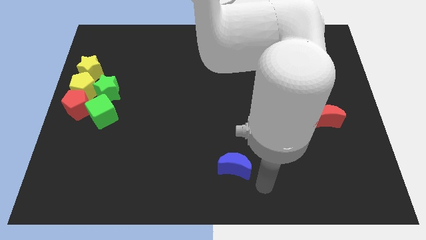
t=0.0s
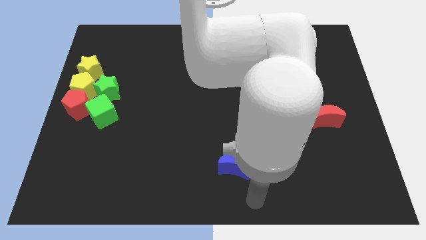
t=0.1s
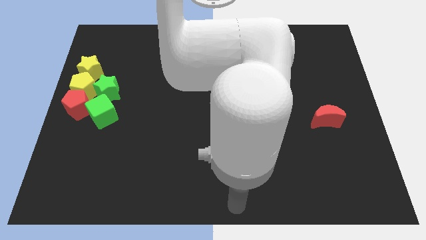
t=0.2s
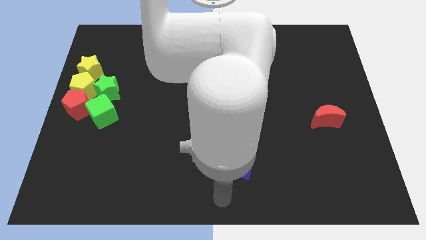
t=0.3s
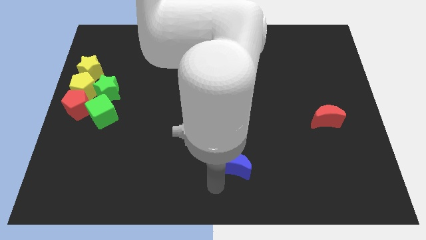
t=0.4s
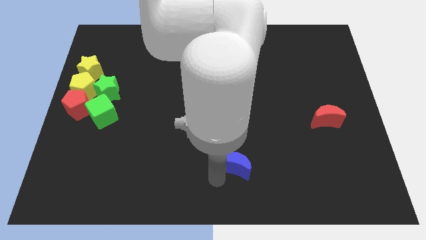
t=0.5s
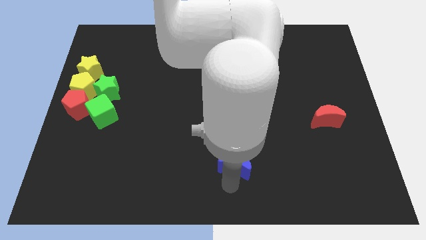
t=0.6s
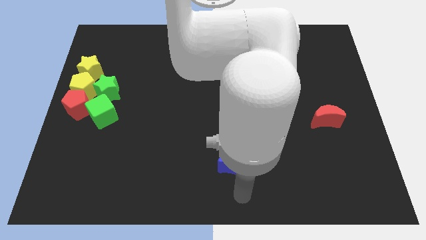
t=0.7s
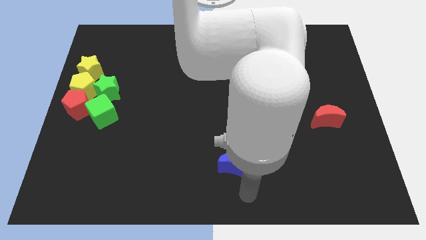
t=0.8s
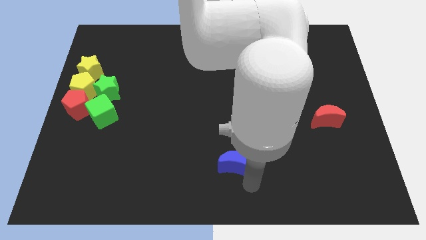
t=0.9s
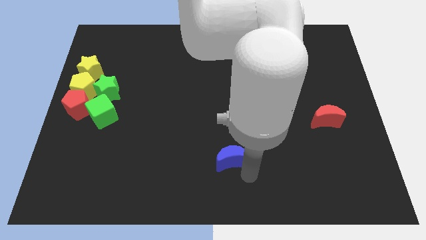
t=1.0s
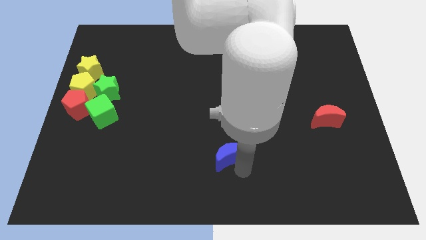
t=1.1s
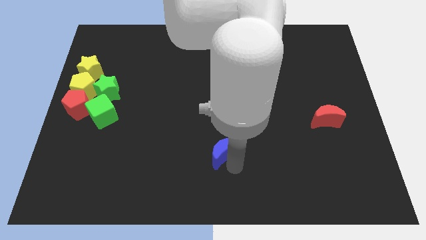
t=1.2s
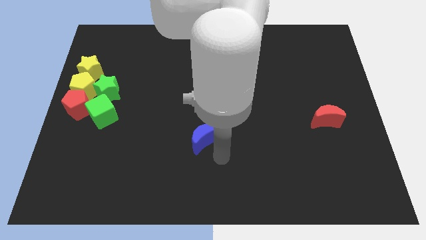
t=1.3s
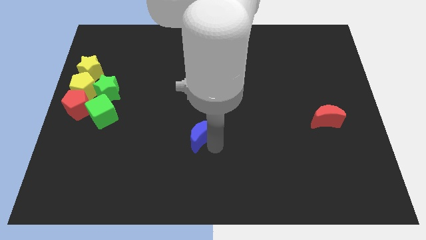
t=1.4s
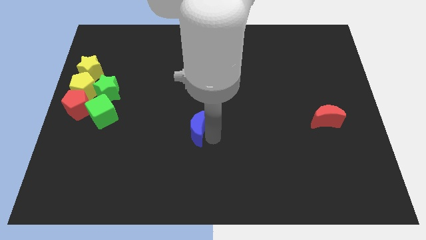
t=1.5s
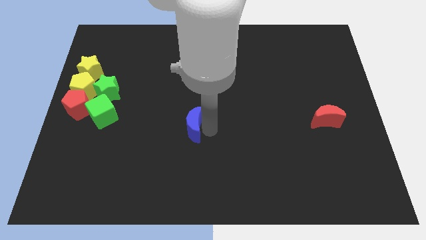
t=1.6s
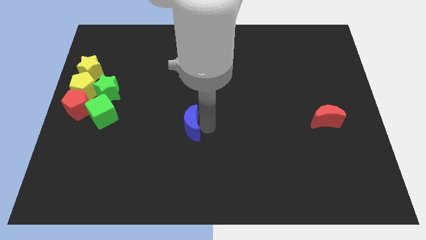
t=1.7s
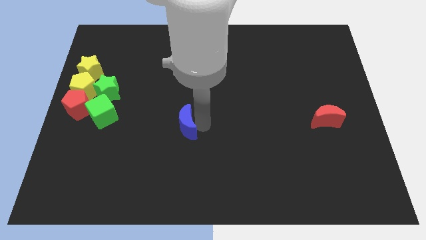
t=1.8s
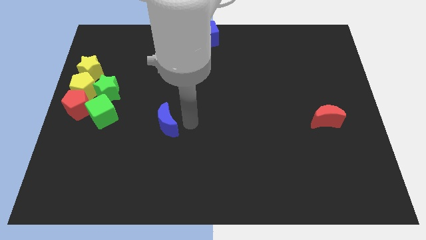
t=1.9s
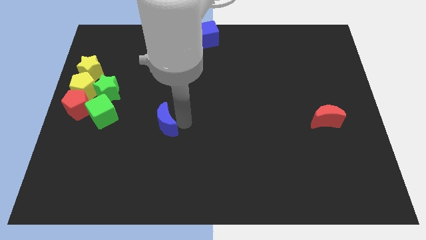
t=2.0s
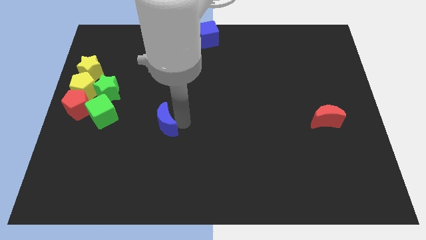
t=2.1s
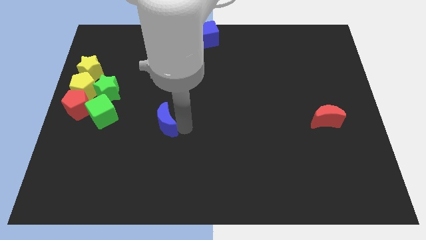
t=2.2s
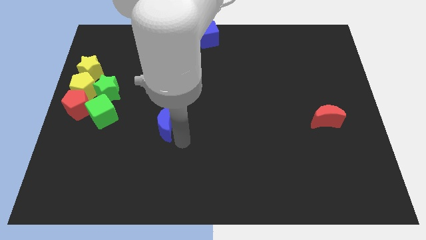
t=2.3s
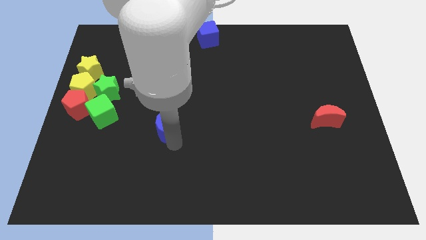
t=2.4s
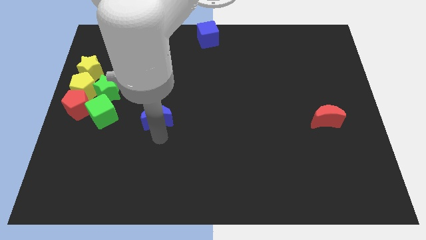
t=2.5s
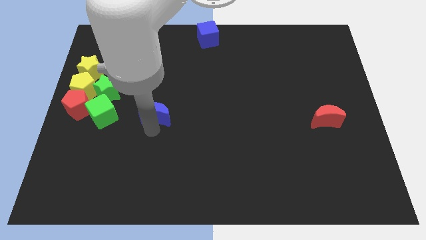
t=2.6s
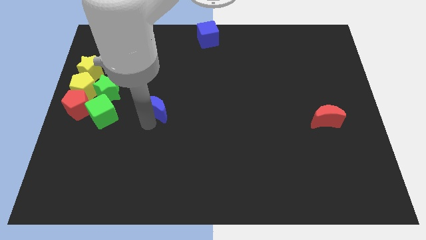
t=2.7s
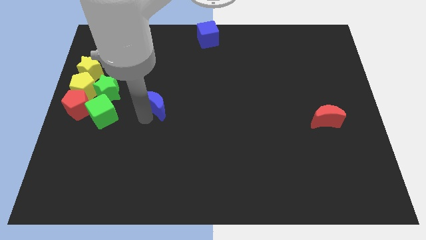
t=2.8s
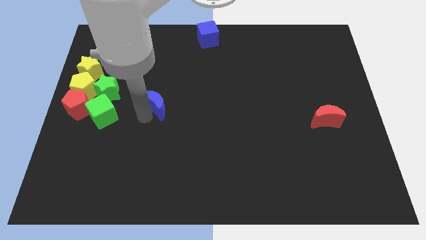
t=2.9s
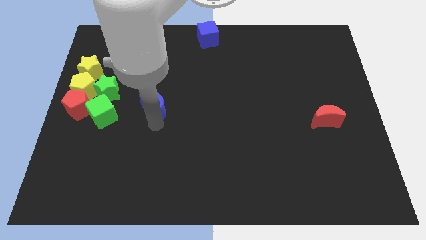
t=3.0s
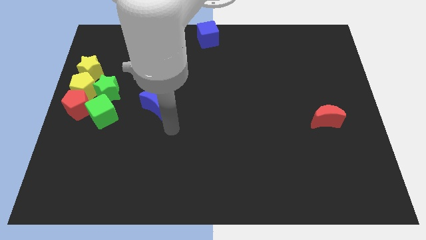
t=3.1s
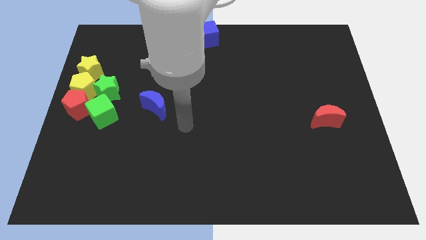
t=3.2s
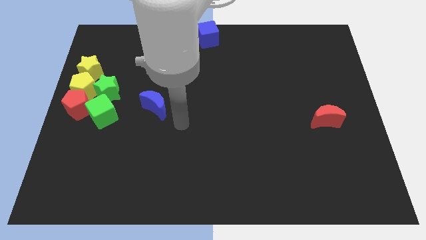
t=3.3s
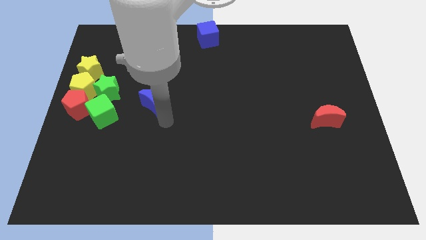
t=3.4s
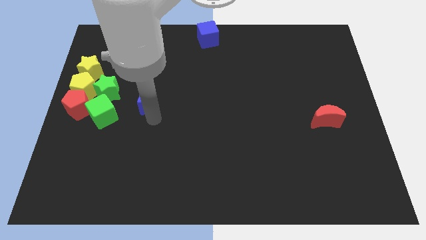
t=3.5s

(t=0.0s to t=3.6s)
move blue crescent towards green star

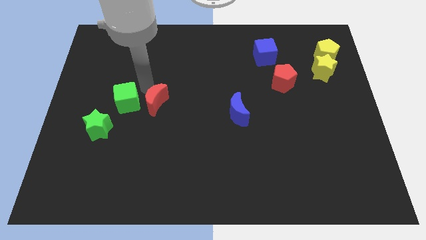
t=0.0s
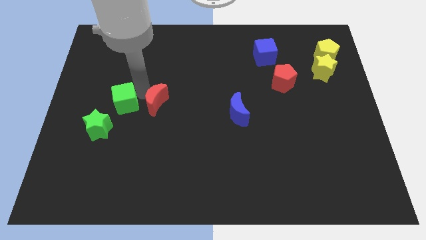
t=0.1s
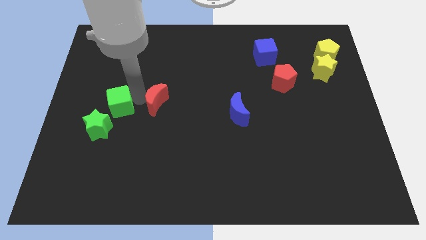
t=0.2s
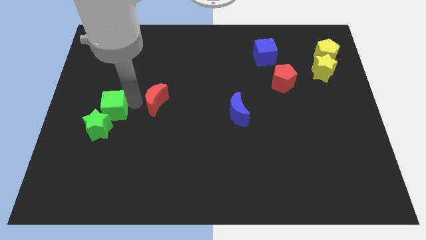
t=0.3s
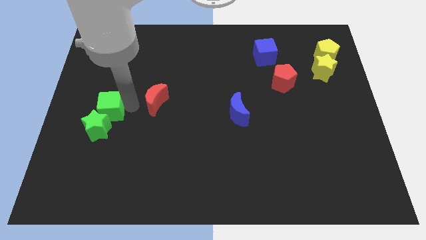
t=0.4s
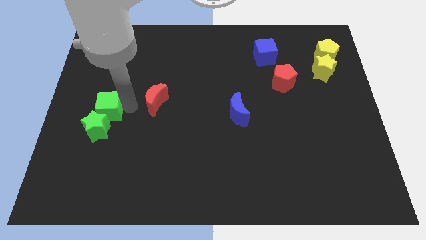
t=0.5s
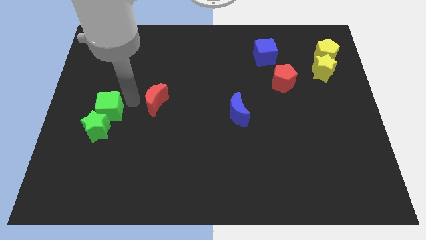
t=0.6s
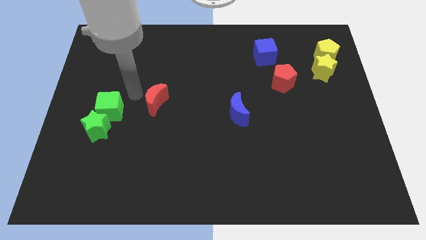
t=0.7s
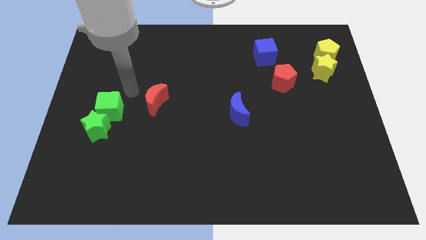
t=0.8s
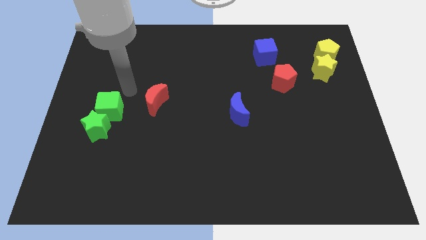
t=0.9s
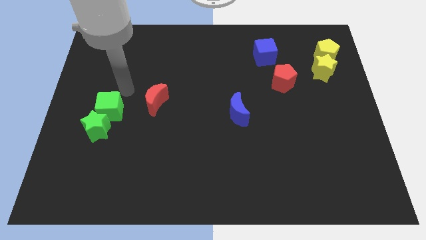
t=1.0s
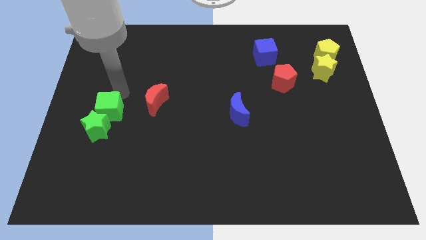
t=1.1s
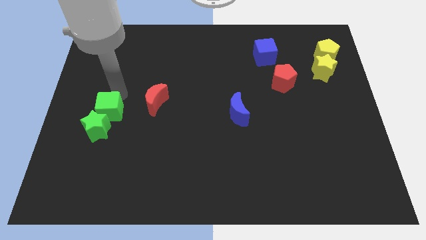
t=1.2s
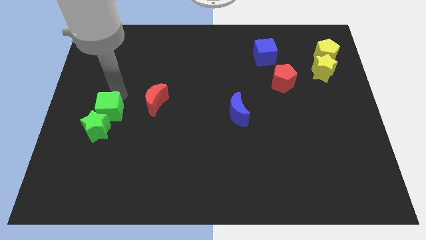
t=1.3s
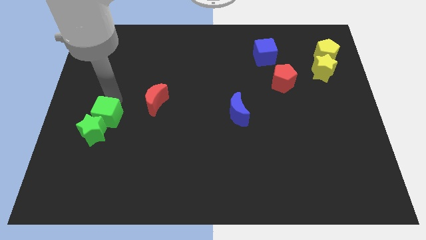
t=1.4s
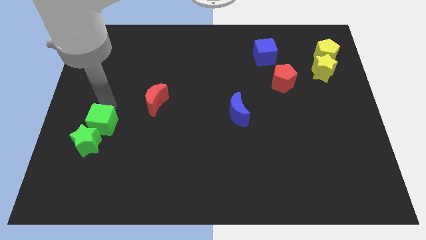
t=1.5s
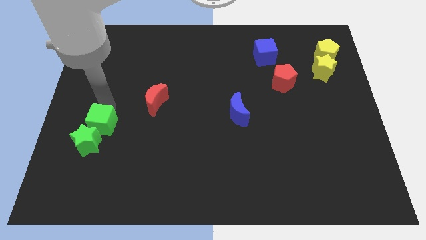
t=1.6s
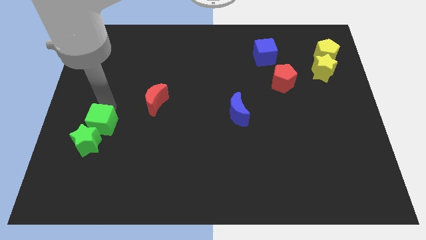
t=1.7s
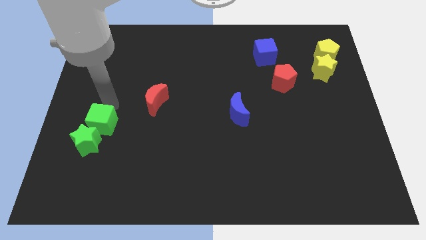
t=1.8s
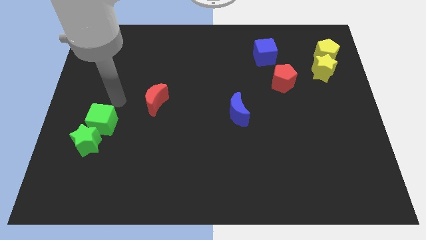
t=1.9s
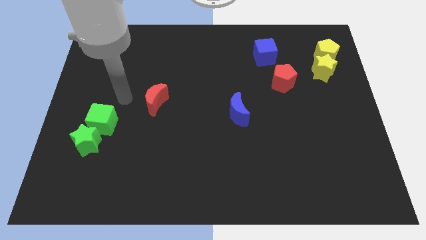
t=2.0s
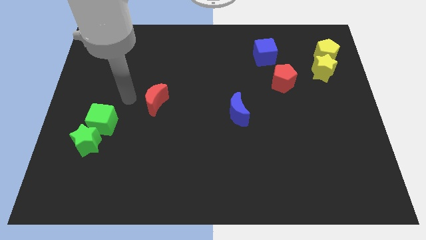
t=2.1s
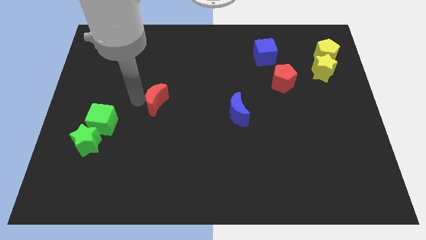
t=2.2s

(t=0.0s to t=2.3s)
move the green blocks to the bottom of the board

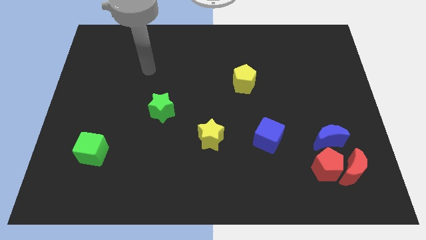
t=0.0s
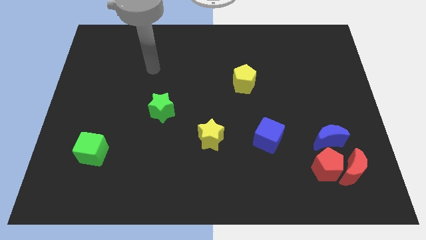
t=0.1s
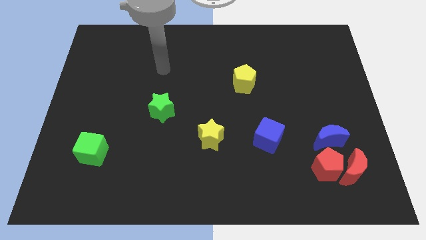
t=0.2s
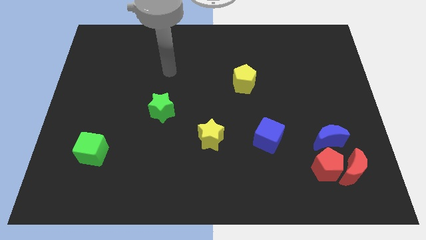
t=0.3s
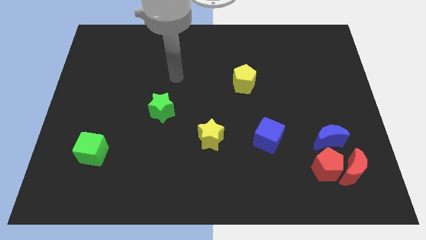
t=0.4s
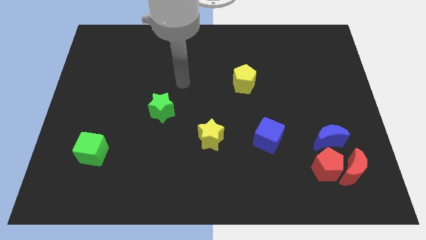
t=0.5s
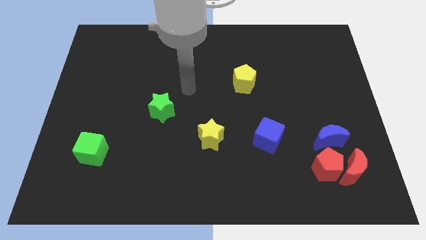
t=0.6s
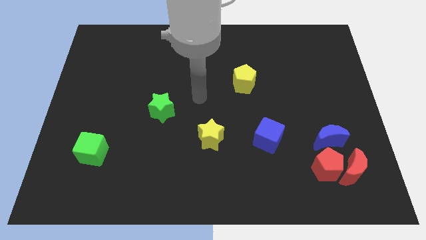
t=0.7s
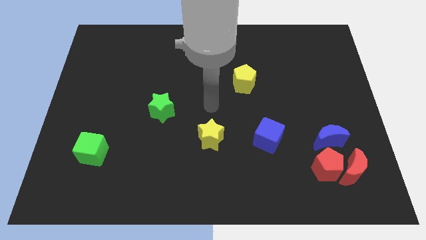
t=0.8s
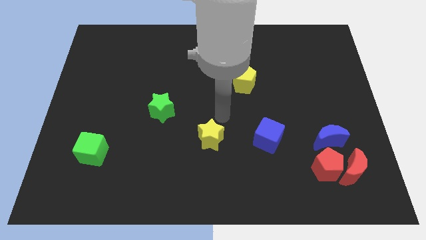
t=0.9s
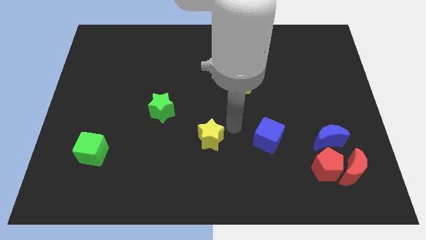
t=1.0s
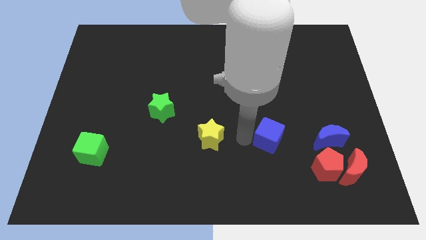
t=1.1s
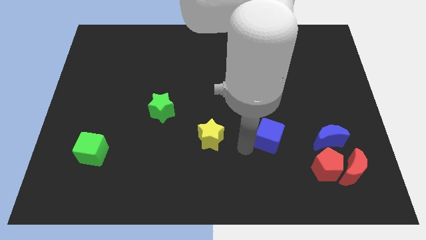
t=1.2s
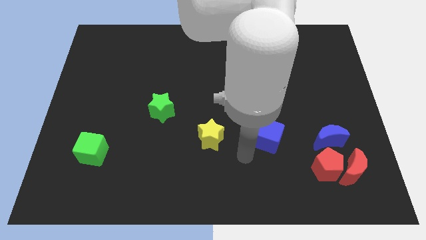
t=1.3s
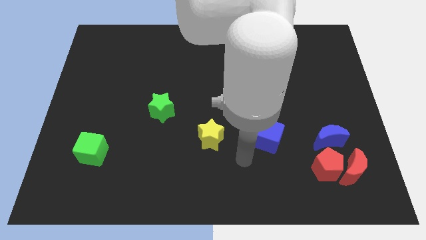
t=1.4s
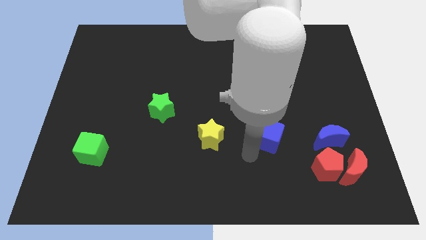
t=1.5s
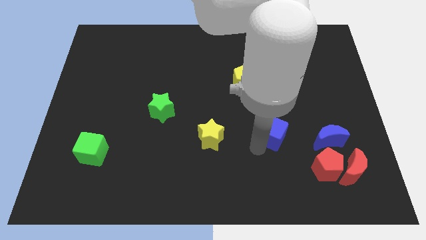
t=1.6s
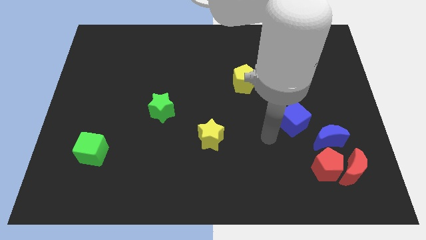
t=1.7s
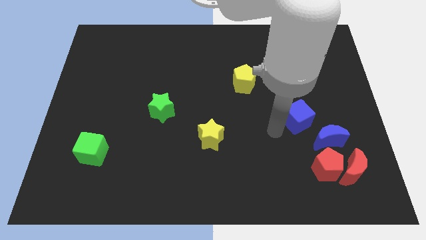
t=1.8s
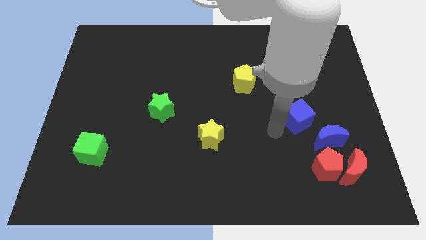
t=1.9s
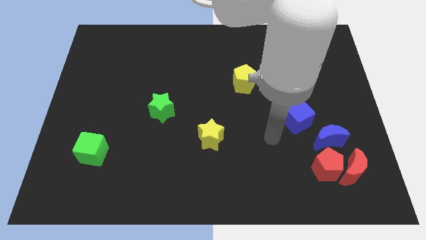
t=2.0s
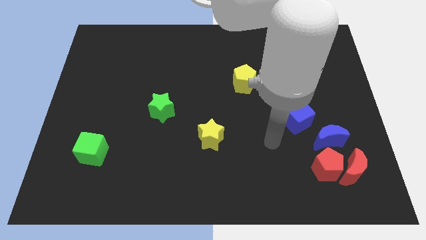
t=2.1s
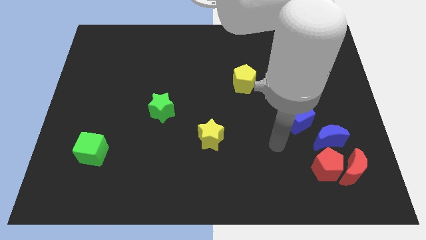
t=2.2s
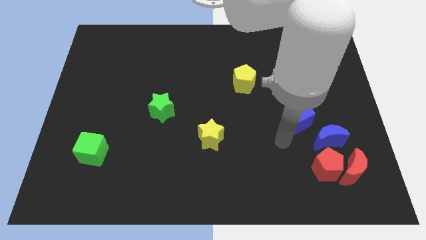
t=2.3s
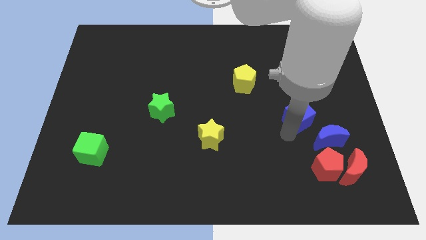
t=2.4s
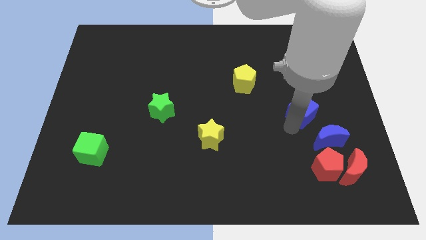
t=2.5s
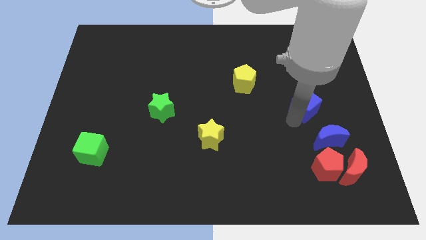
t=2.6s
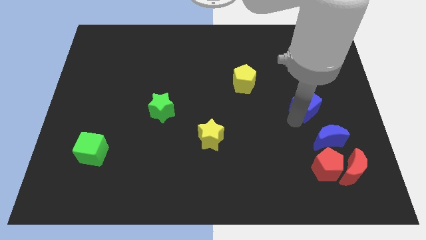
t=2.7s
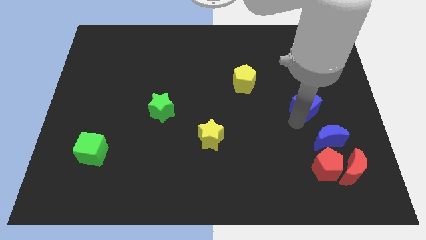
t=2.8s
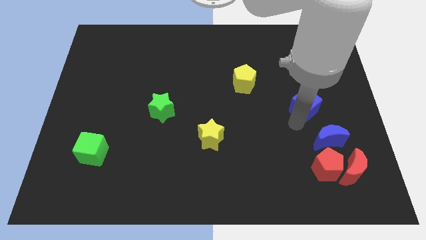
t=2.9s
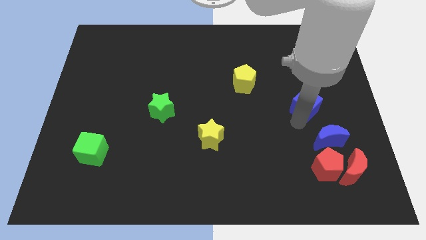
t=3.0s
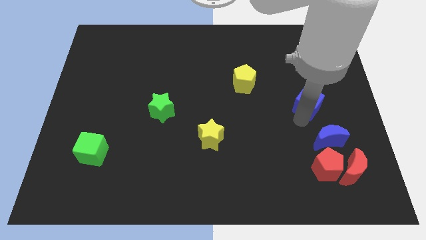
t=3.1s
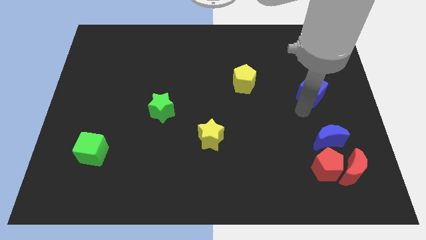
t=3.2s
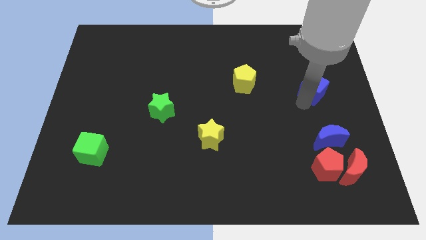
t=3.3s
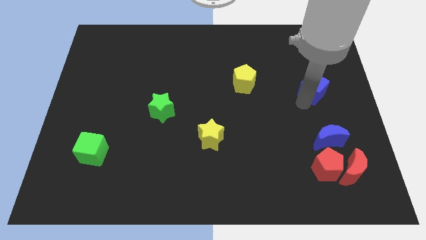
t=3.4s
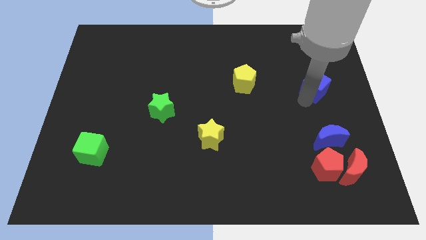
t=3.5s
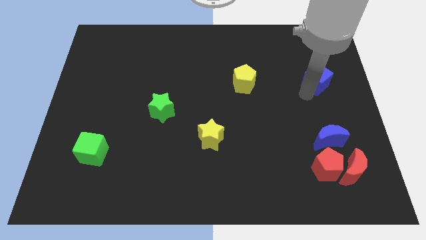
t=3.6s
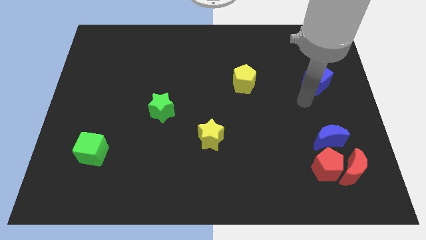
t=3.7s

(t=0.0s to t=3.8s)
separate the blue cube which is in between yellow star and blue crescent
